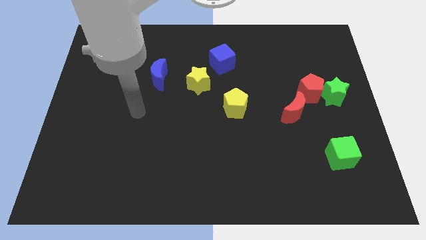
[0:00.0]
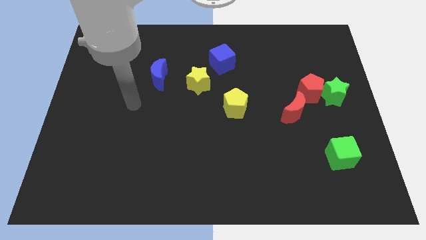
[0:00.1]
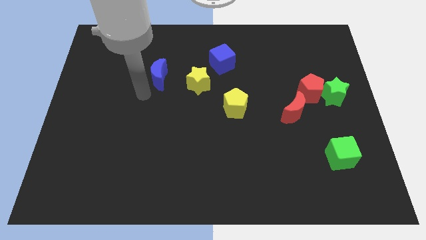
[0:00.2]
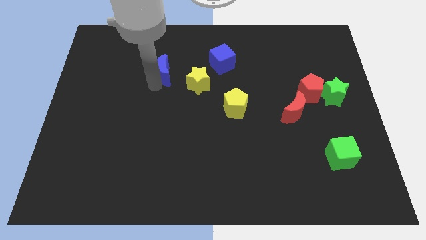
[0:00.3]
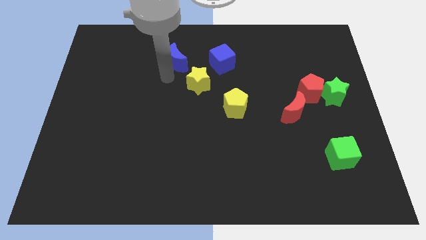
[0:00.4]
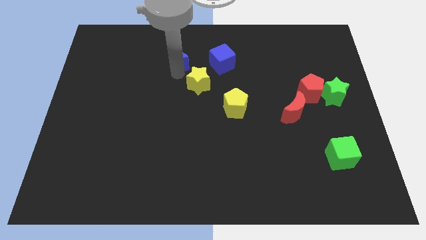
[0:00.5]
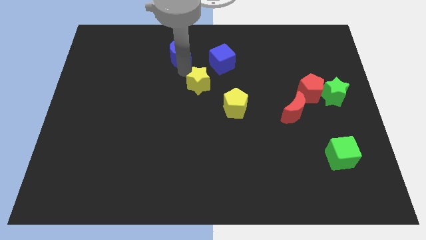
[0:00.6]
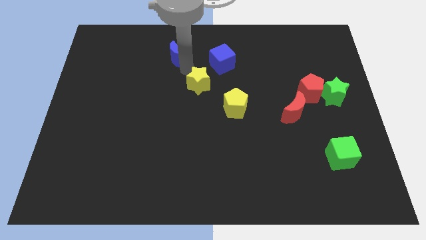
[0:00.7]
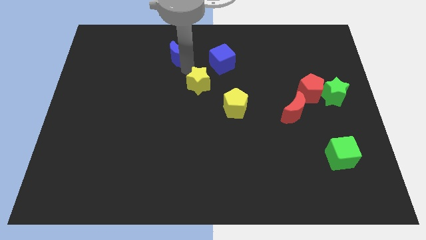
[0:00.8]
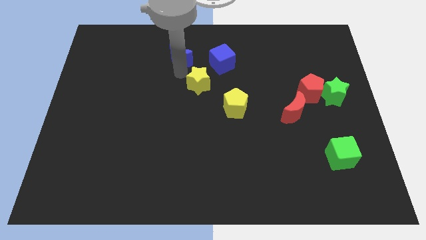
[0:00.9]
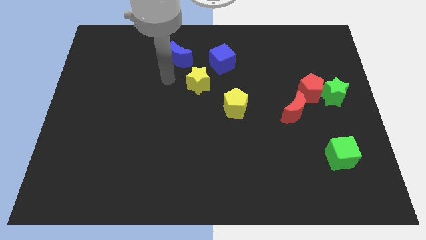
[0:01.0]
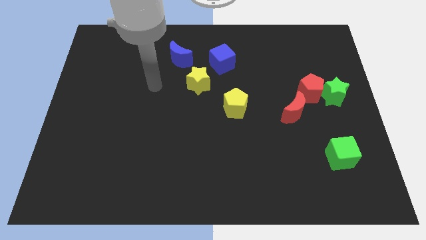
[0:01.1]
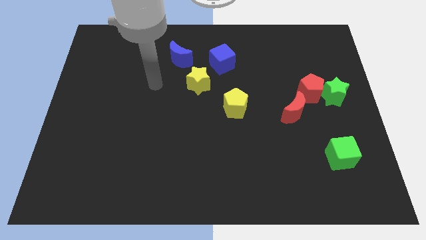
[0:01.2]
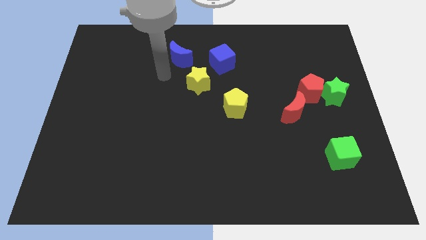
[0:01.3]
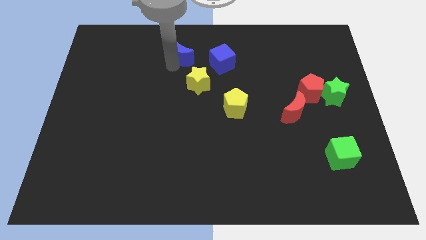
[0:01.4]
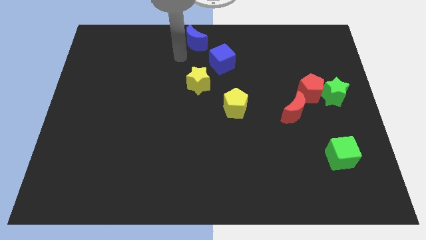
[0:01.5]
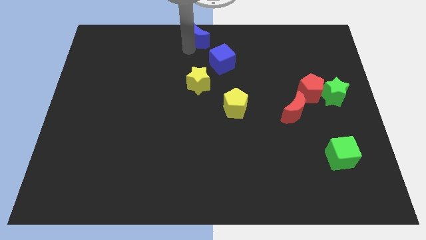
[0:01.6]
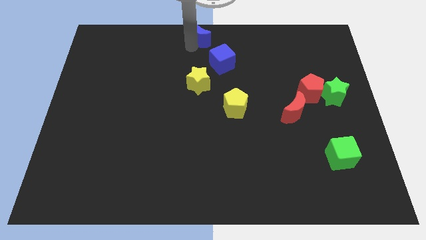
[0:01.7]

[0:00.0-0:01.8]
place blue crescent vertically to the top side of the yellow star

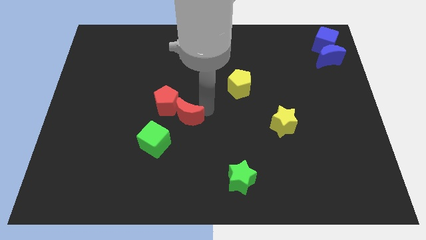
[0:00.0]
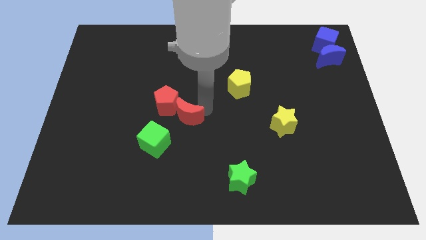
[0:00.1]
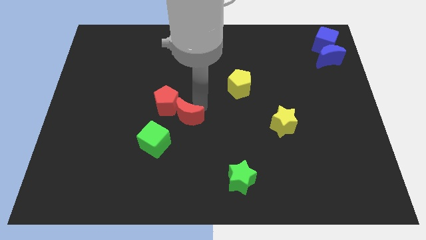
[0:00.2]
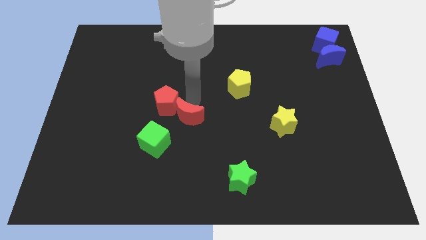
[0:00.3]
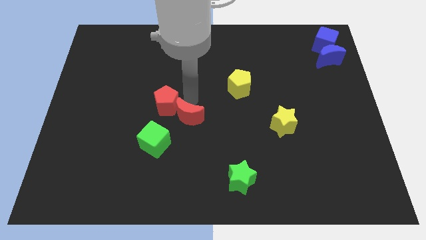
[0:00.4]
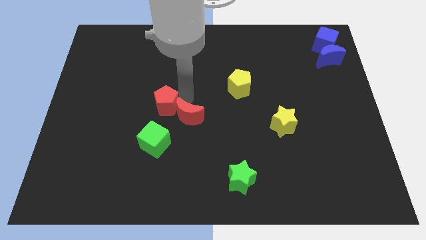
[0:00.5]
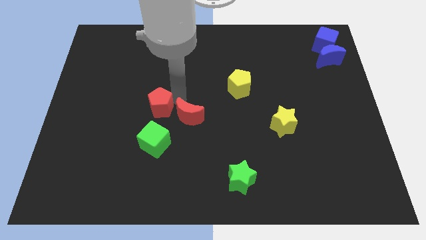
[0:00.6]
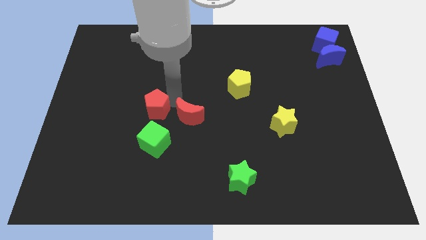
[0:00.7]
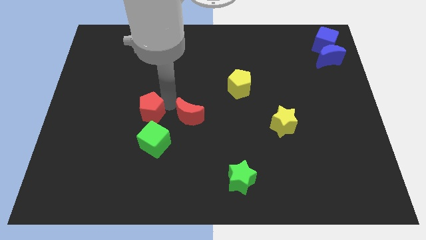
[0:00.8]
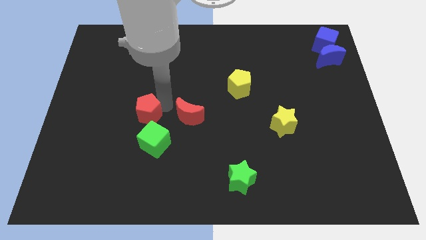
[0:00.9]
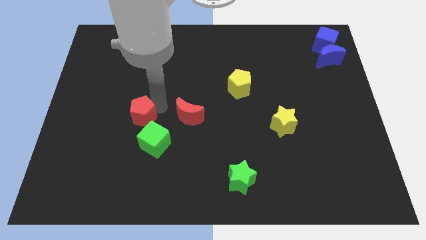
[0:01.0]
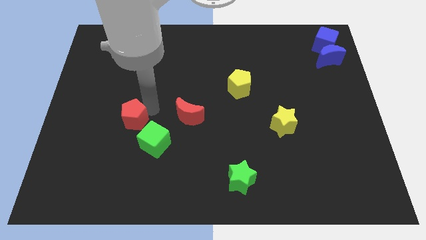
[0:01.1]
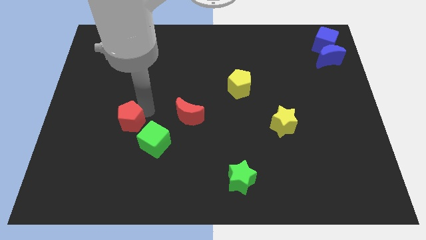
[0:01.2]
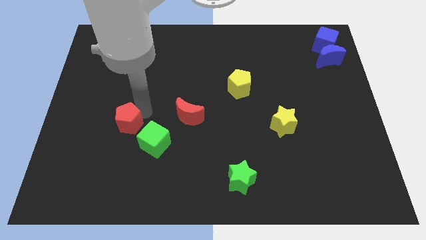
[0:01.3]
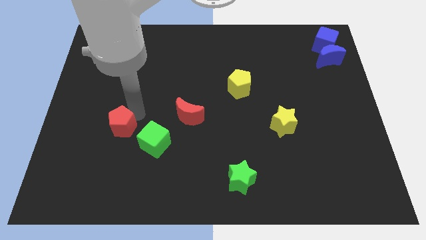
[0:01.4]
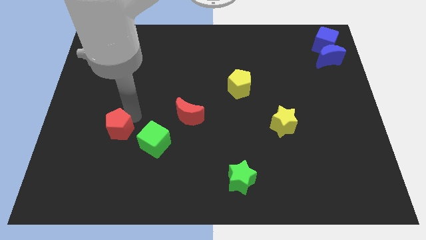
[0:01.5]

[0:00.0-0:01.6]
separate the red pentagon away from the red moon

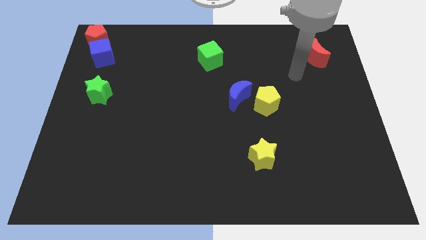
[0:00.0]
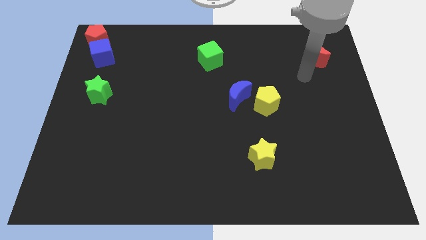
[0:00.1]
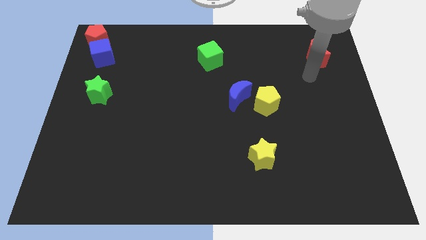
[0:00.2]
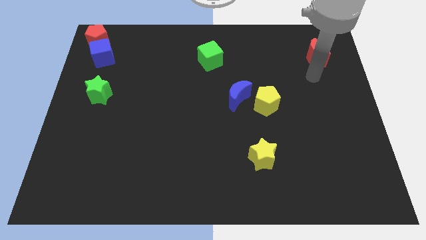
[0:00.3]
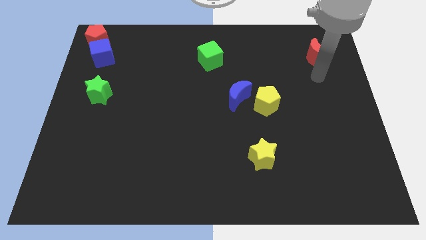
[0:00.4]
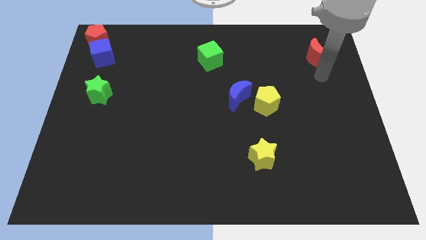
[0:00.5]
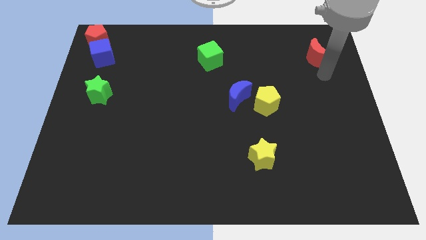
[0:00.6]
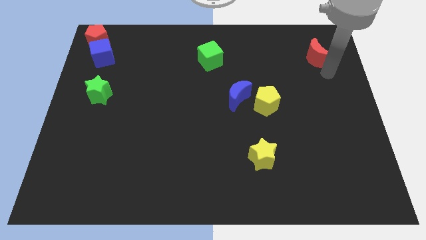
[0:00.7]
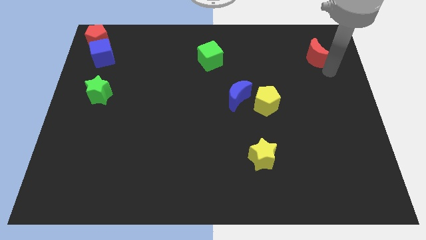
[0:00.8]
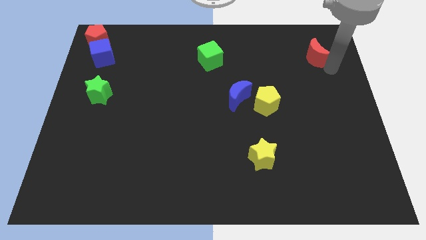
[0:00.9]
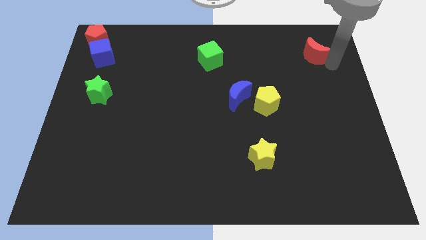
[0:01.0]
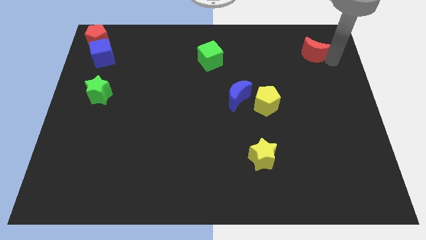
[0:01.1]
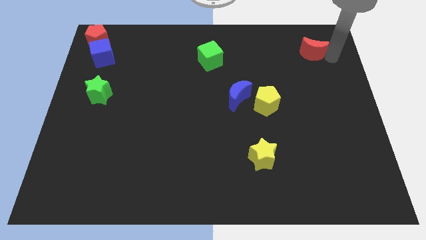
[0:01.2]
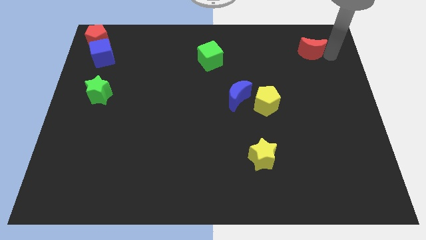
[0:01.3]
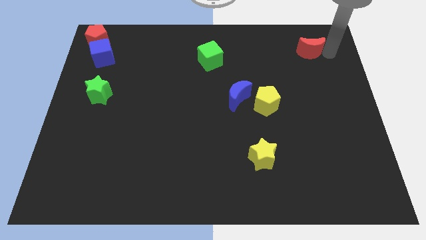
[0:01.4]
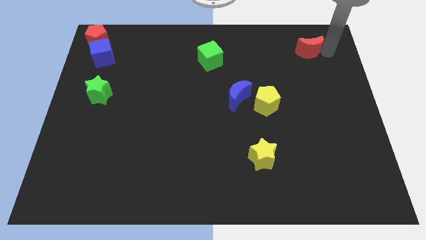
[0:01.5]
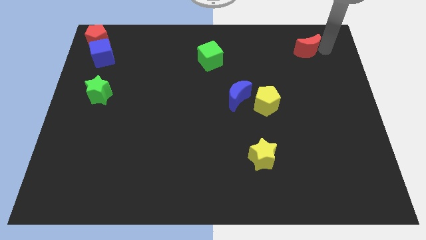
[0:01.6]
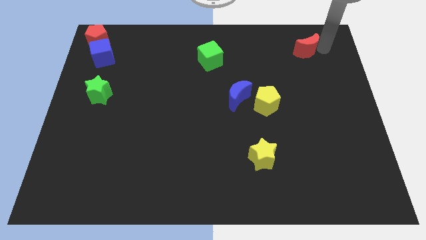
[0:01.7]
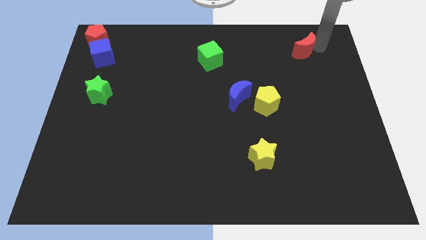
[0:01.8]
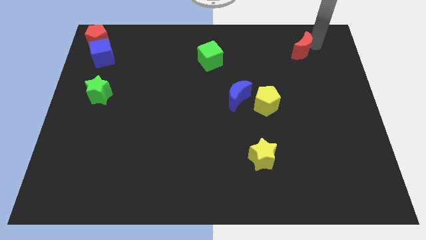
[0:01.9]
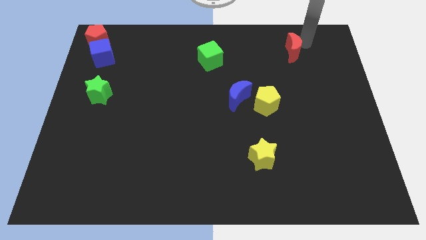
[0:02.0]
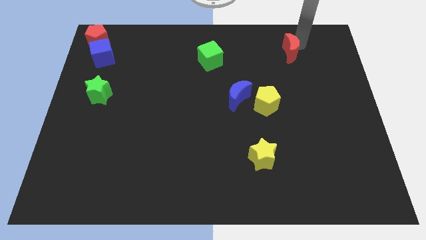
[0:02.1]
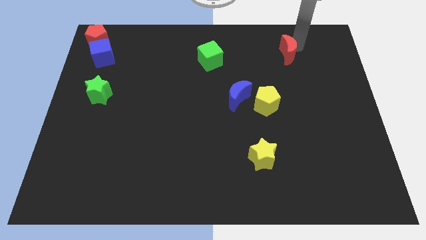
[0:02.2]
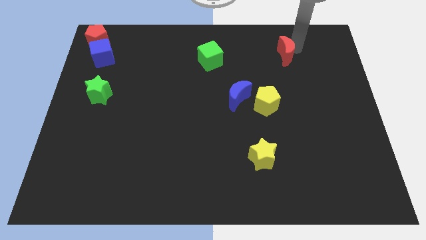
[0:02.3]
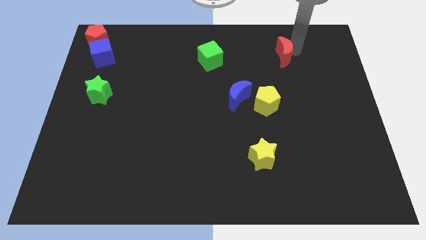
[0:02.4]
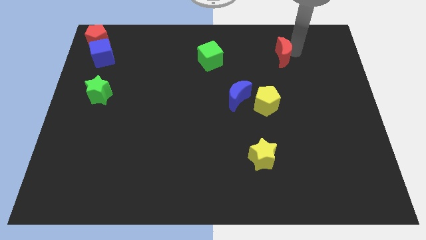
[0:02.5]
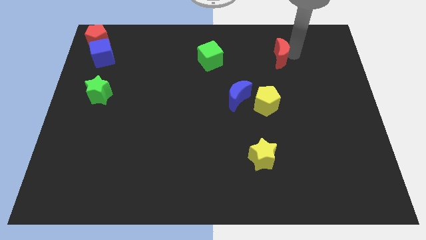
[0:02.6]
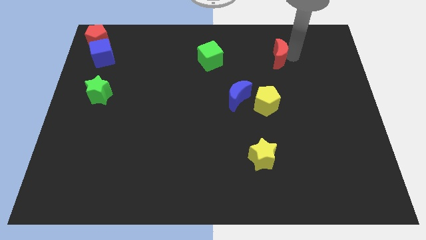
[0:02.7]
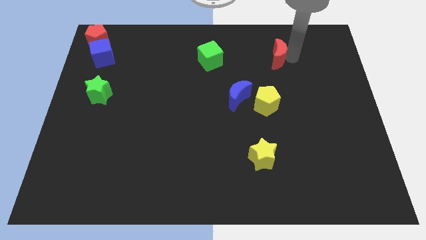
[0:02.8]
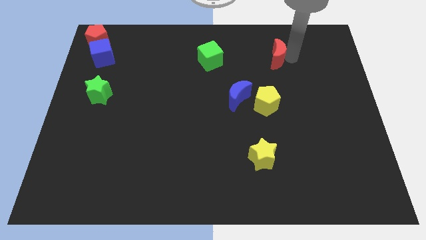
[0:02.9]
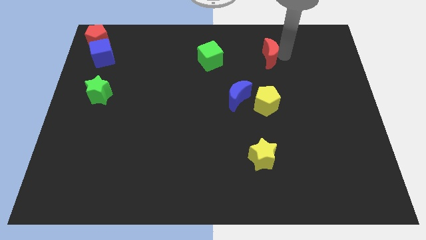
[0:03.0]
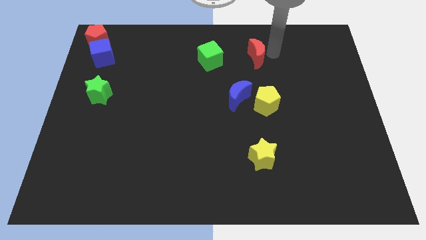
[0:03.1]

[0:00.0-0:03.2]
place the red moon vertically on the top of the yellow pentagon

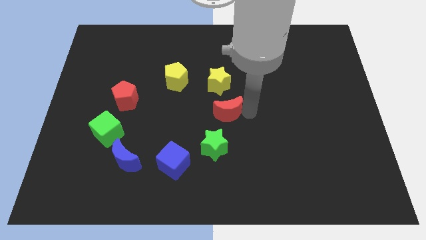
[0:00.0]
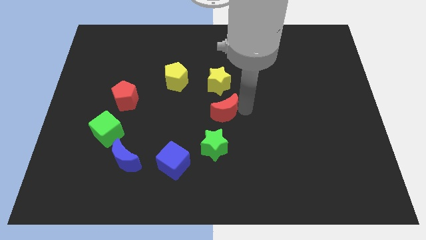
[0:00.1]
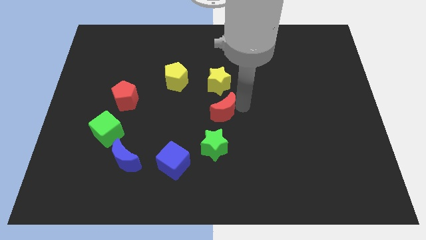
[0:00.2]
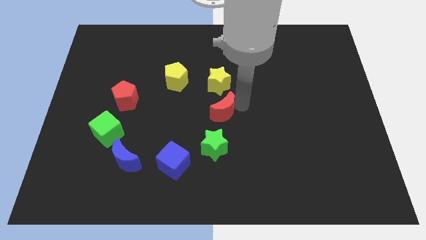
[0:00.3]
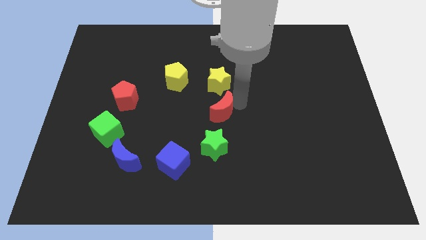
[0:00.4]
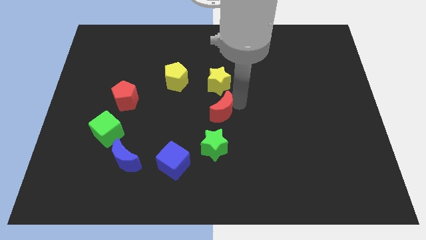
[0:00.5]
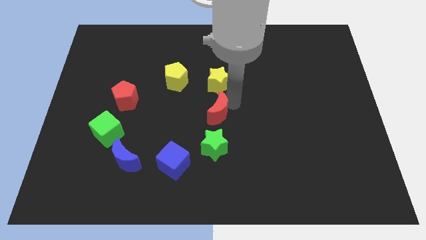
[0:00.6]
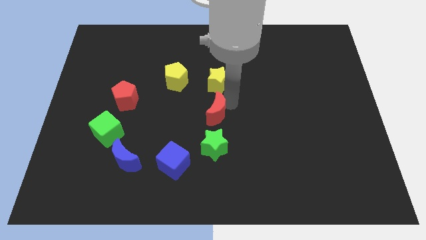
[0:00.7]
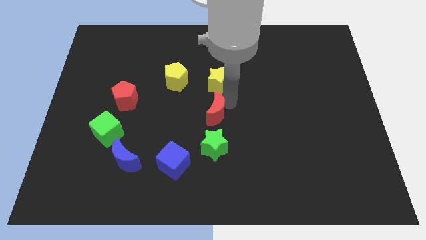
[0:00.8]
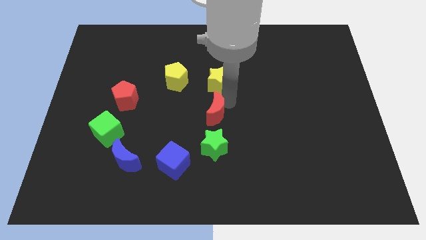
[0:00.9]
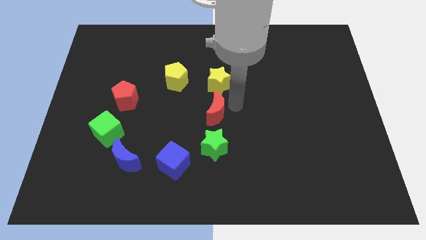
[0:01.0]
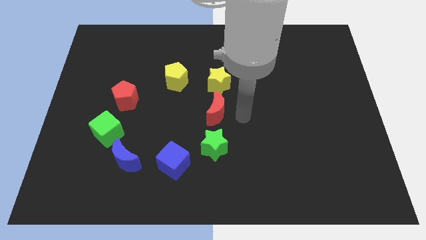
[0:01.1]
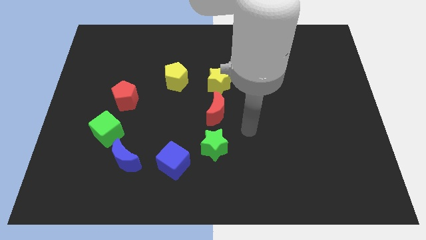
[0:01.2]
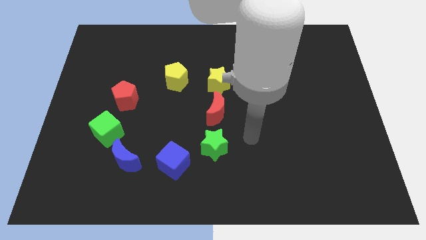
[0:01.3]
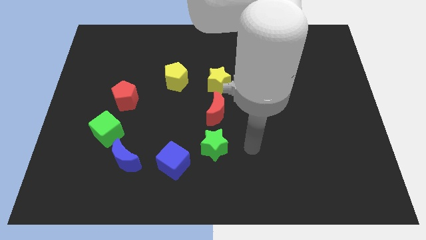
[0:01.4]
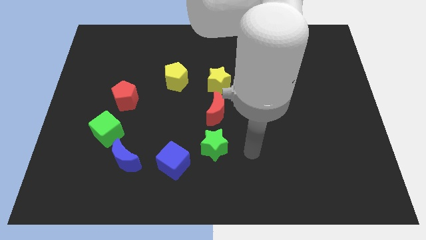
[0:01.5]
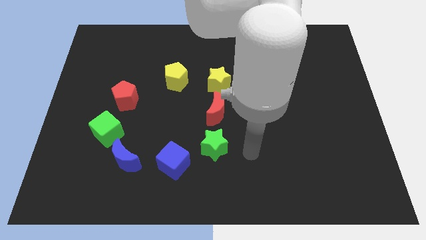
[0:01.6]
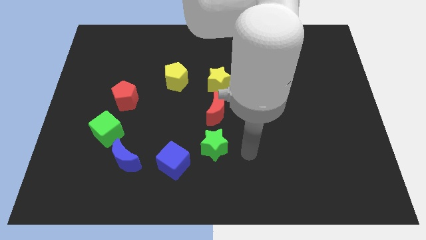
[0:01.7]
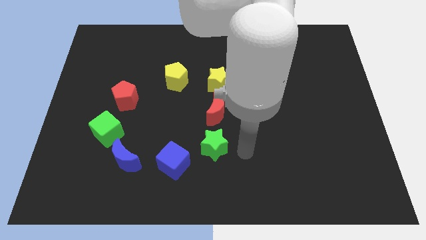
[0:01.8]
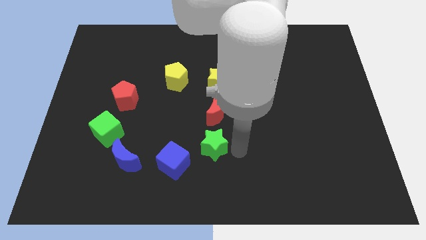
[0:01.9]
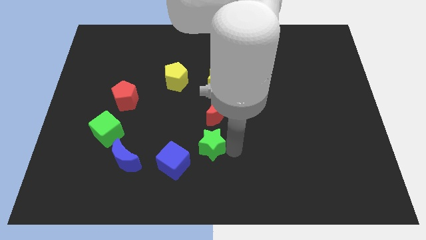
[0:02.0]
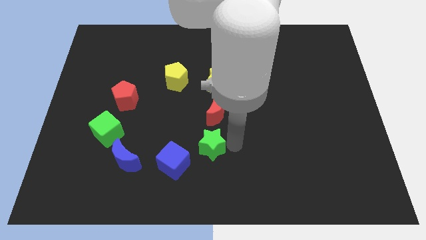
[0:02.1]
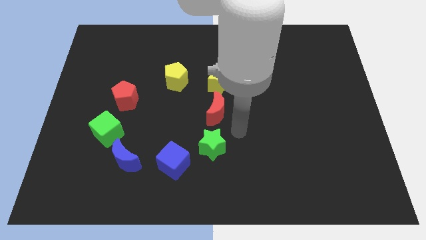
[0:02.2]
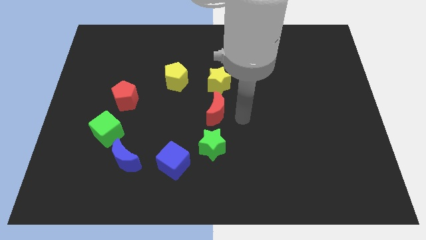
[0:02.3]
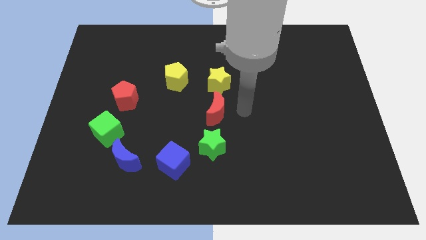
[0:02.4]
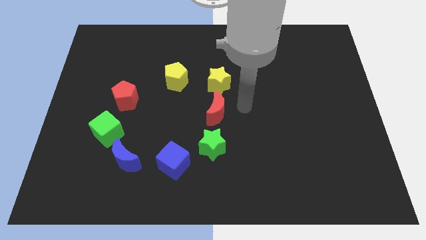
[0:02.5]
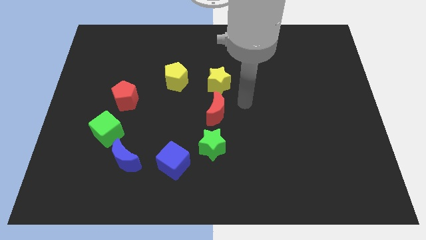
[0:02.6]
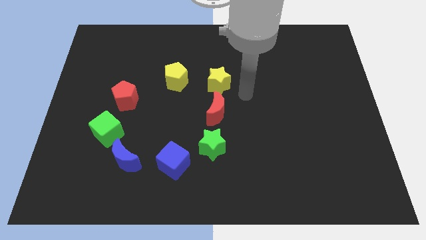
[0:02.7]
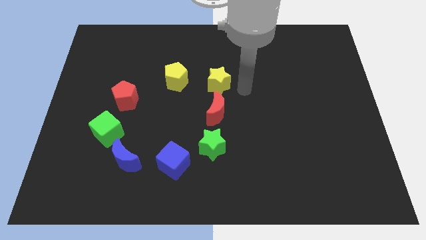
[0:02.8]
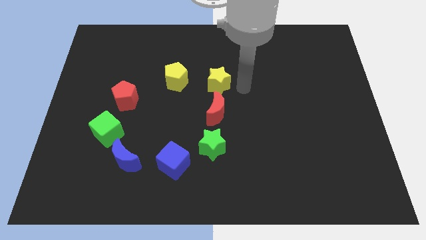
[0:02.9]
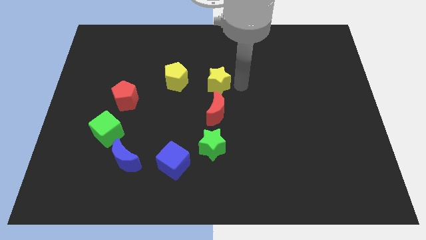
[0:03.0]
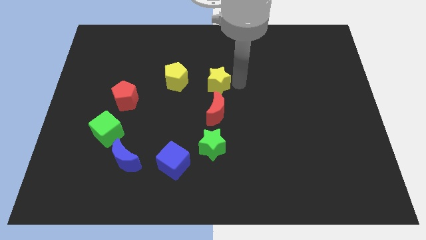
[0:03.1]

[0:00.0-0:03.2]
adjust the red crescent to the bottom of the yellow star
